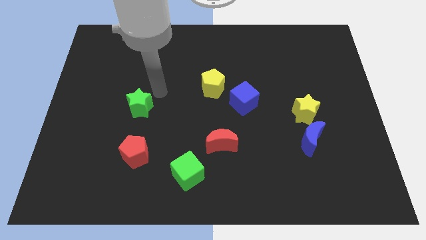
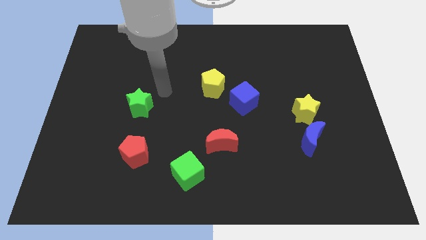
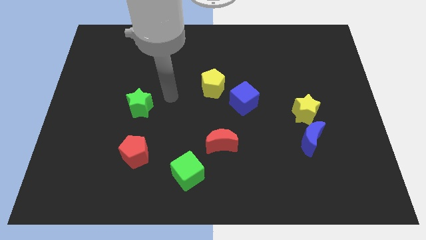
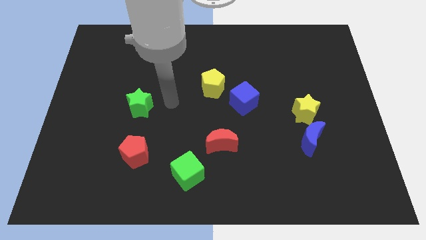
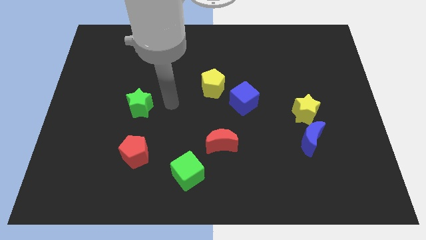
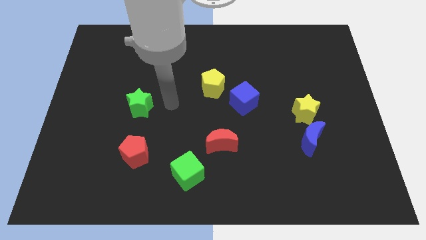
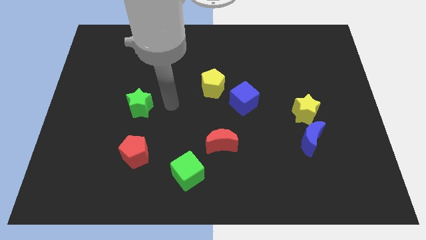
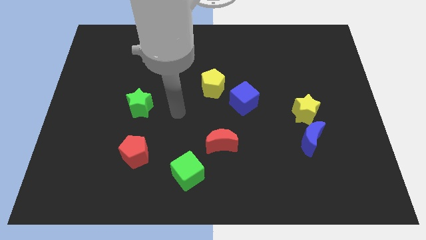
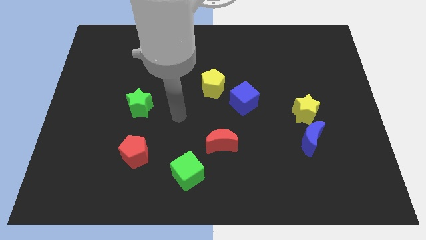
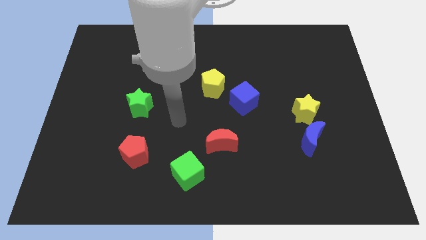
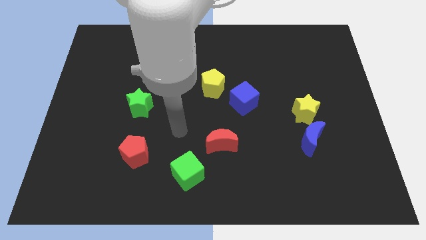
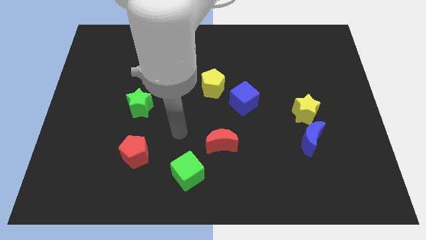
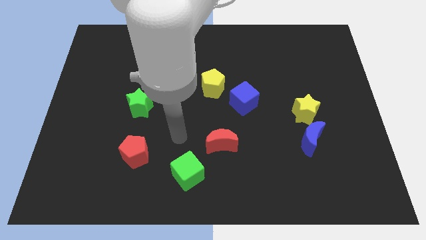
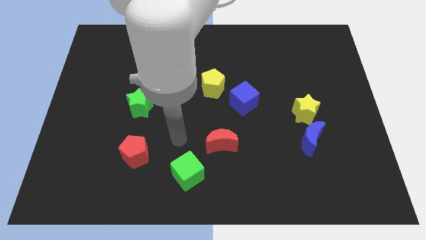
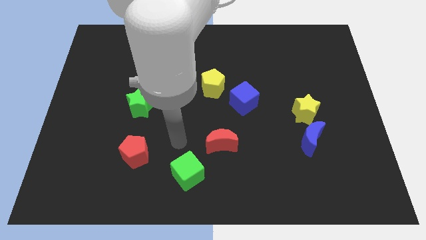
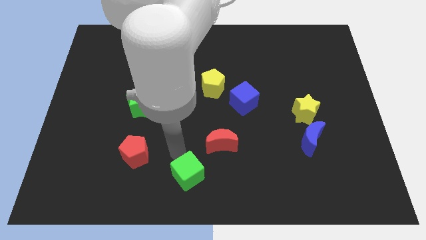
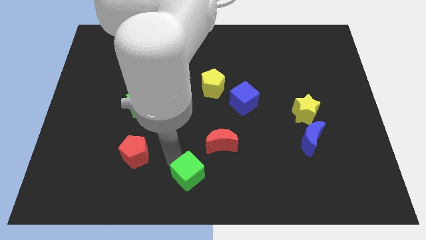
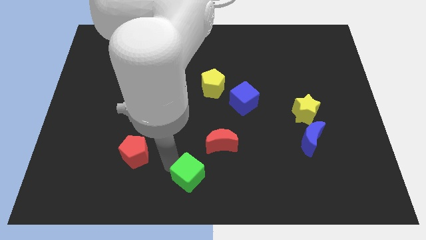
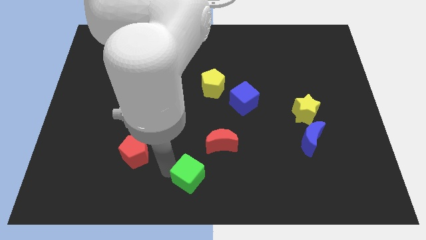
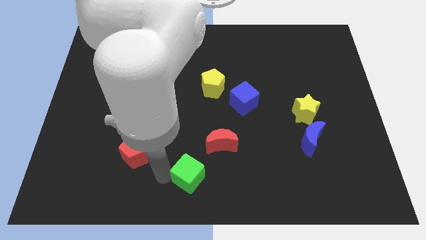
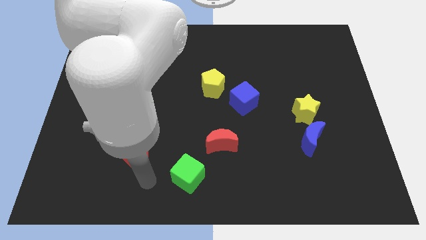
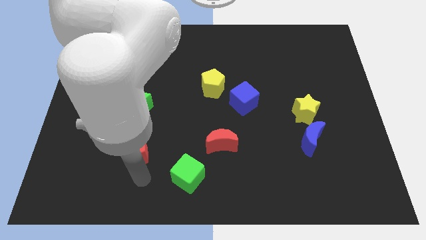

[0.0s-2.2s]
slightly touch the green cube and move away

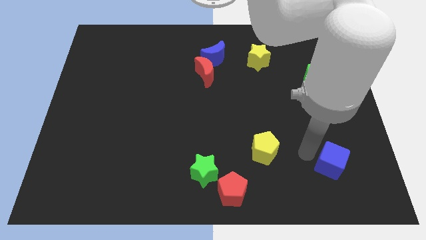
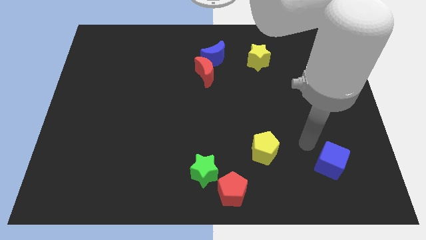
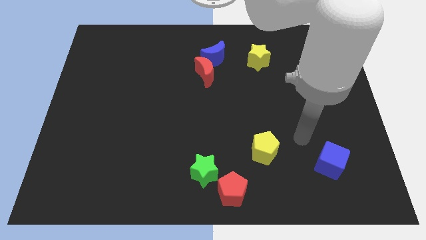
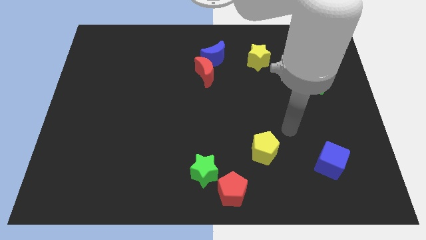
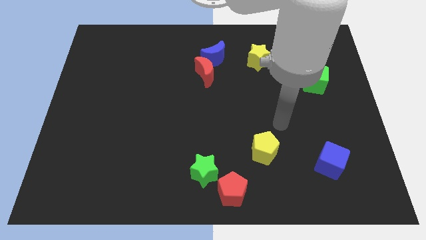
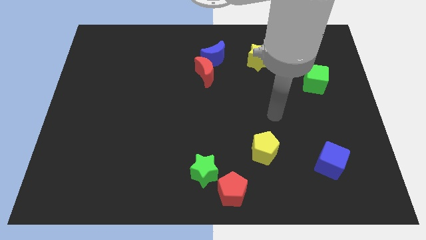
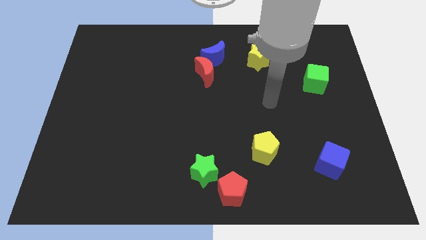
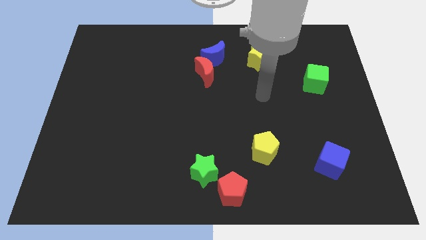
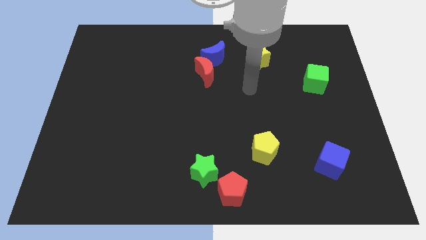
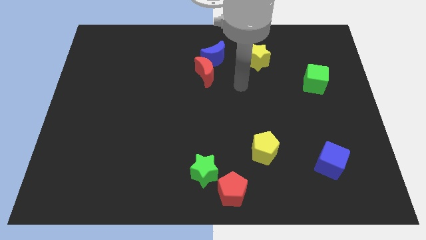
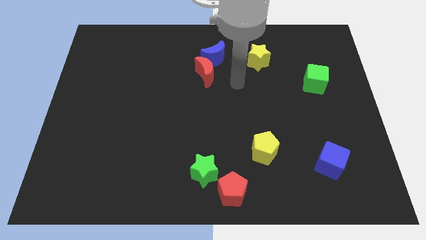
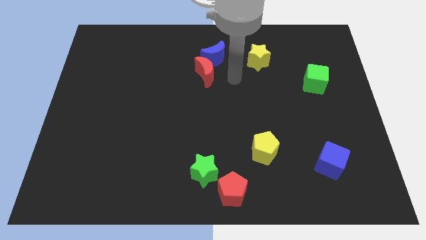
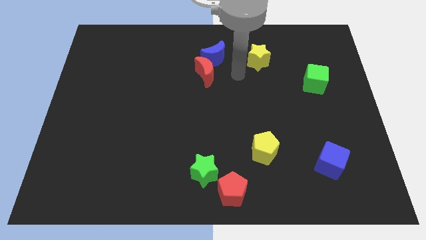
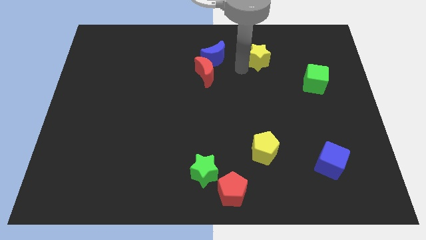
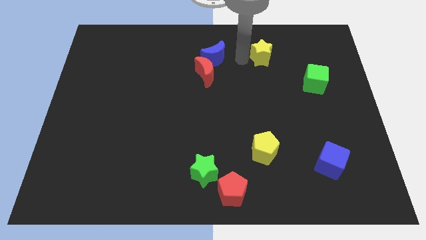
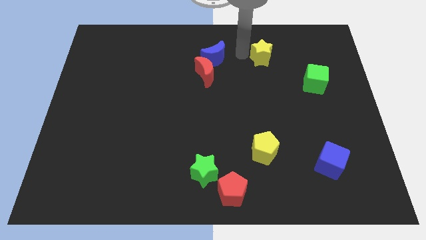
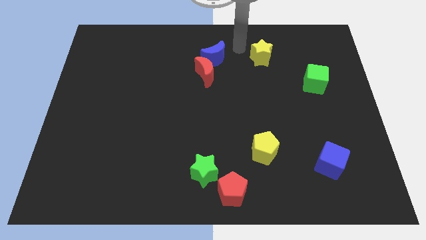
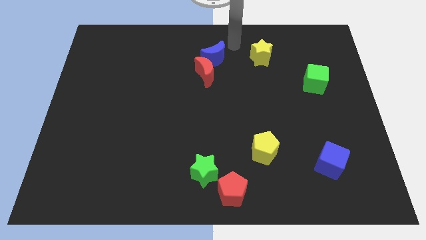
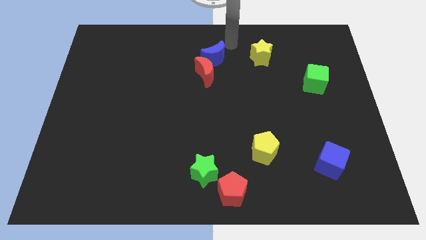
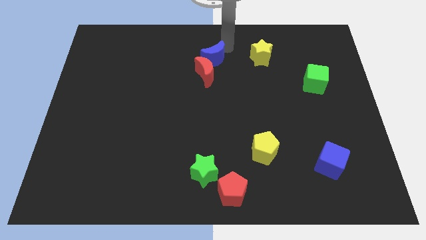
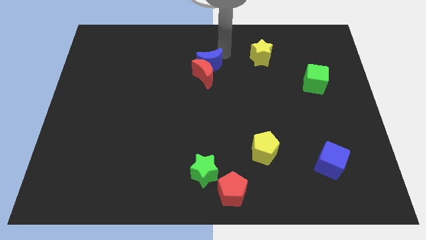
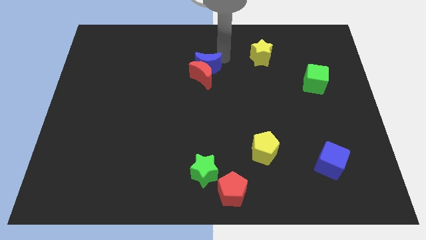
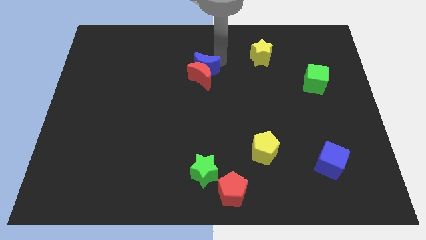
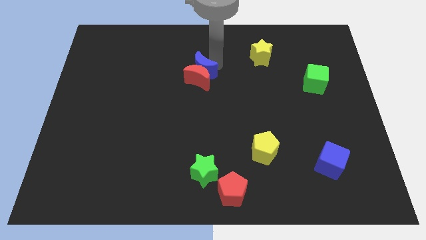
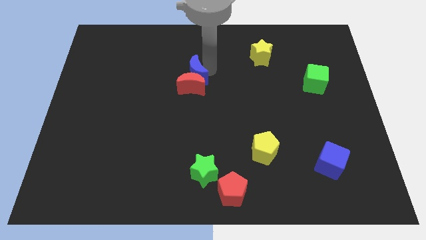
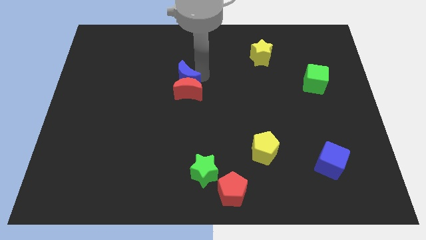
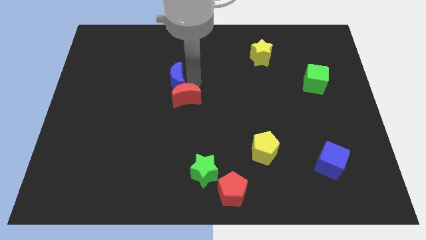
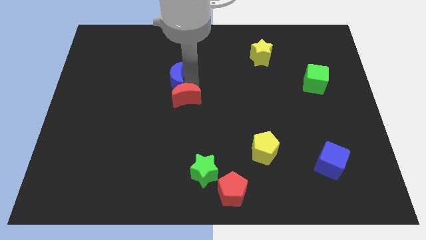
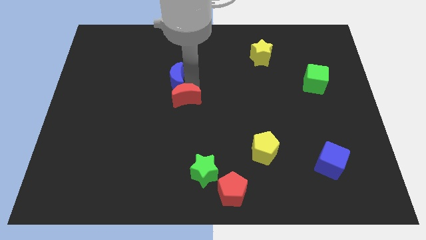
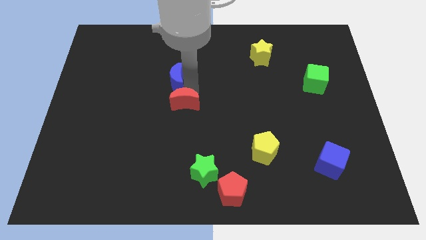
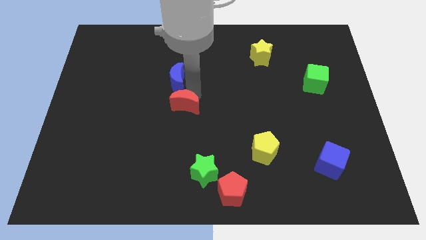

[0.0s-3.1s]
move the blue crescent along with red crescent to the centre of the board

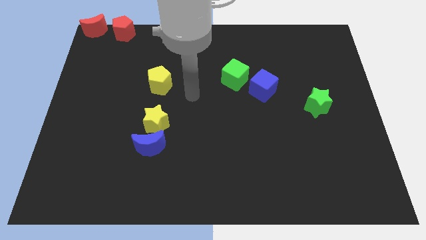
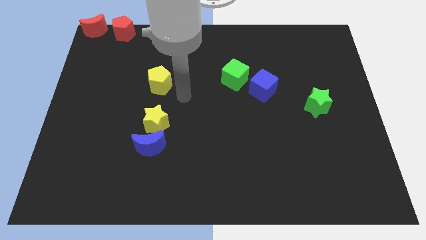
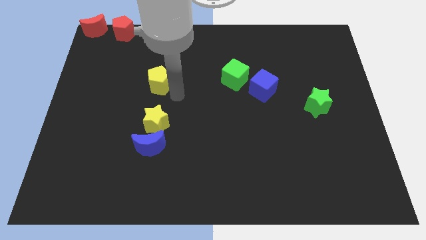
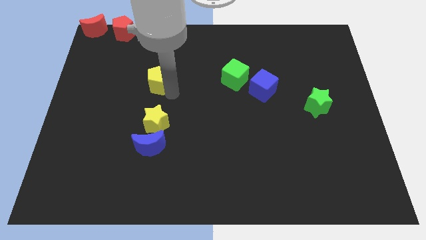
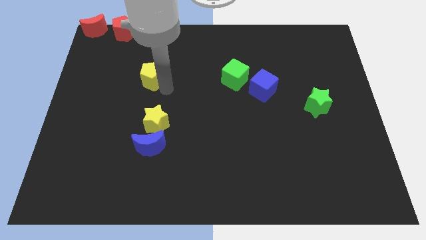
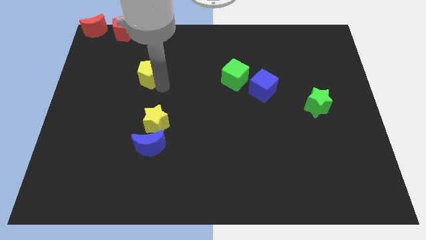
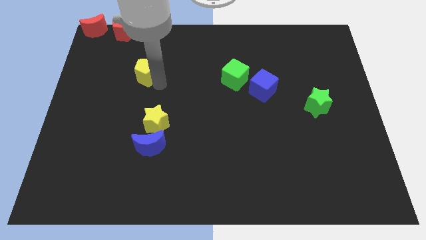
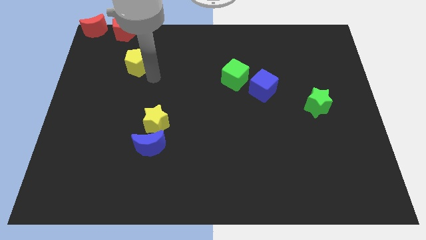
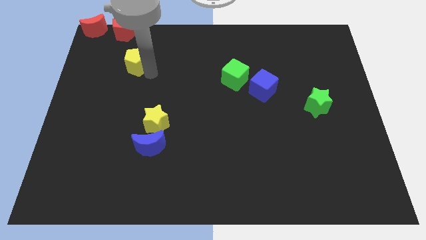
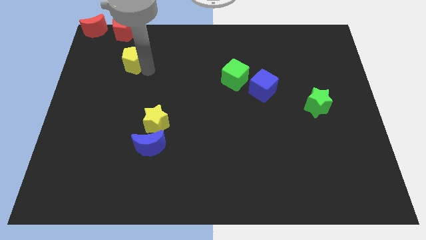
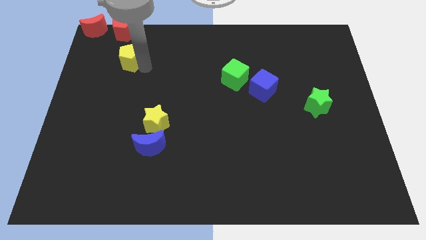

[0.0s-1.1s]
take the yellow pentagon towards the red pentagon

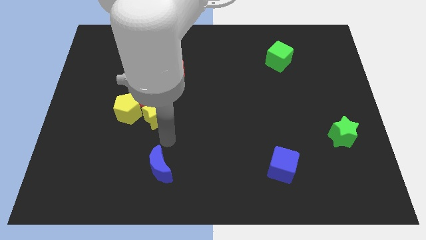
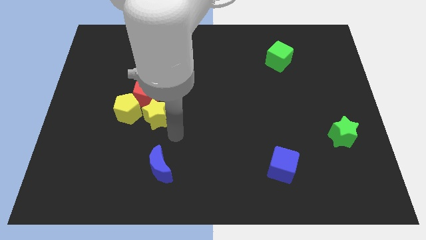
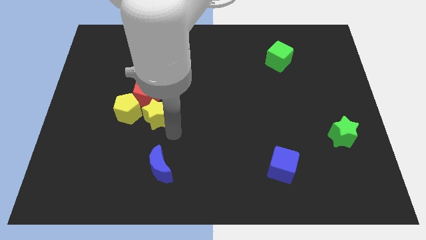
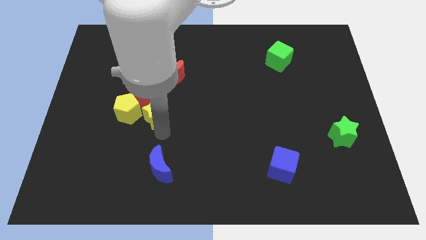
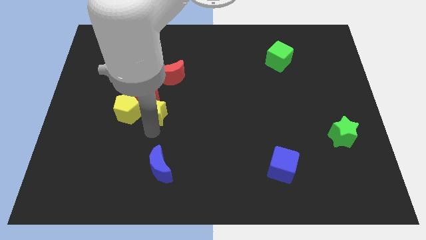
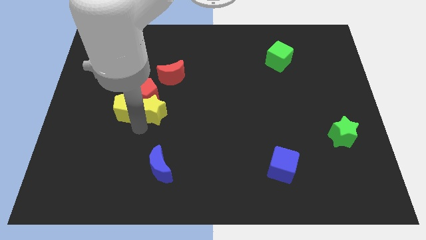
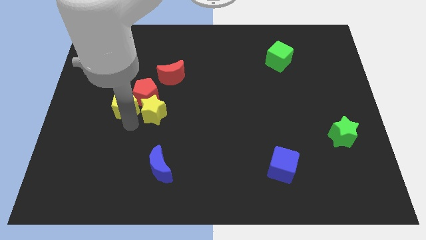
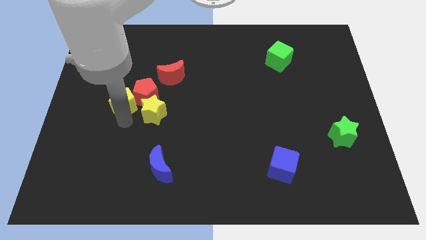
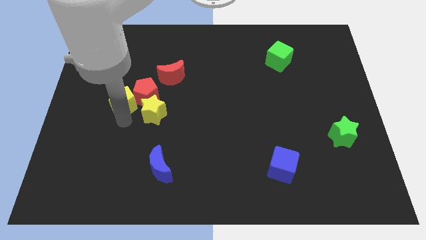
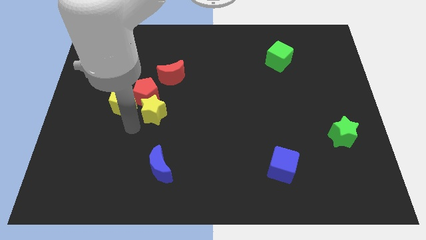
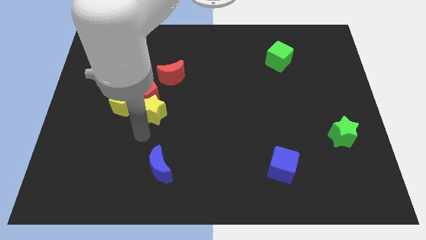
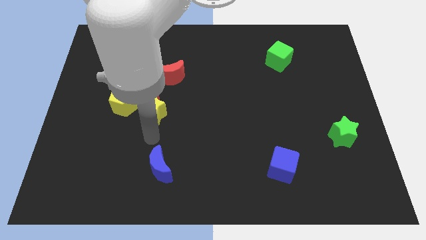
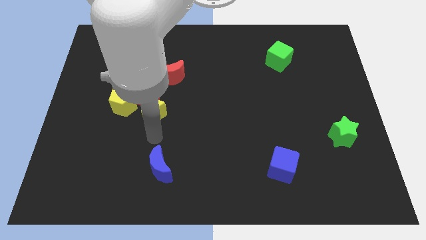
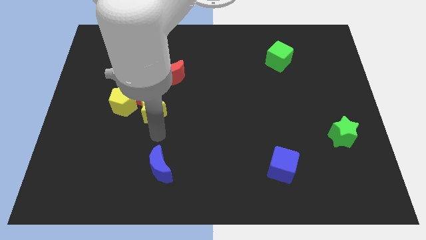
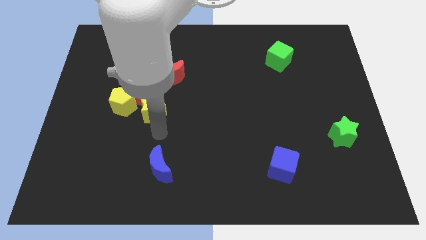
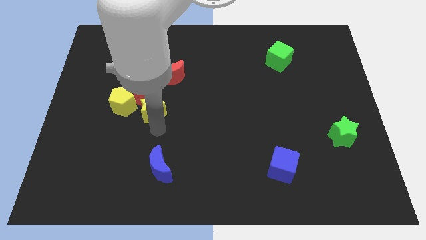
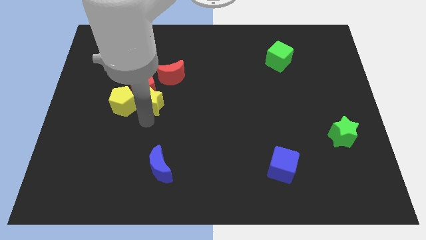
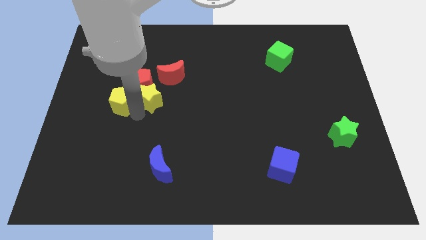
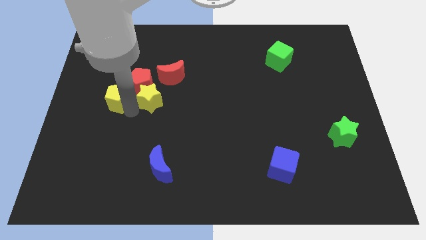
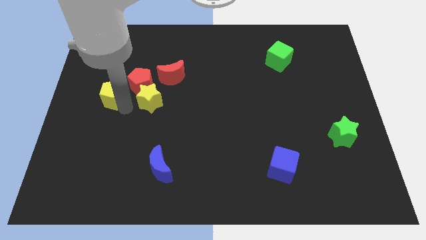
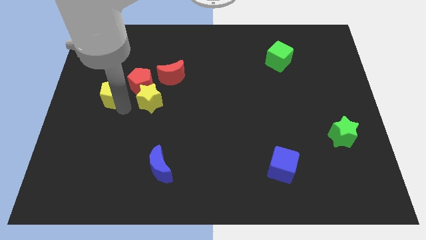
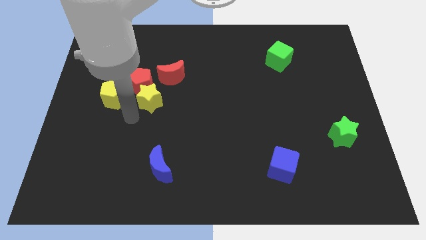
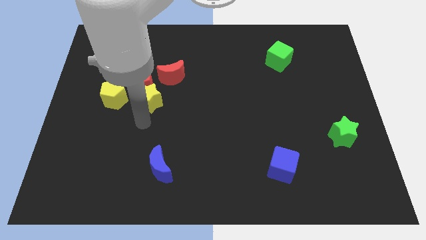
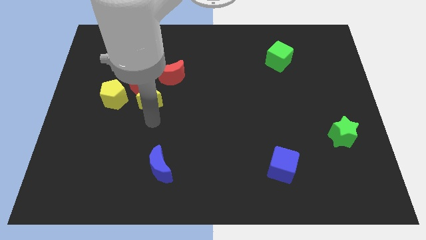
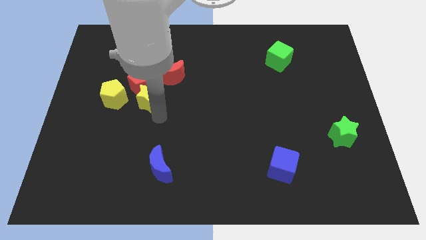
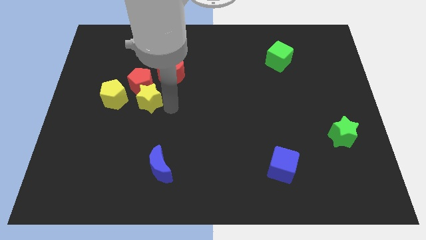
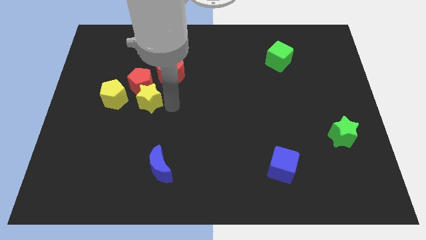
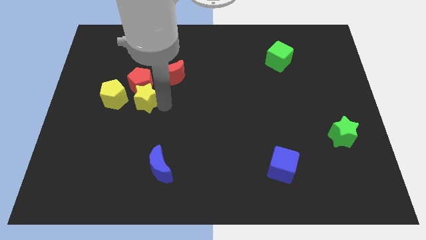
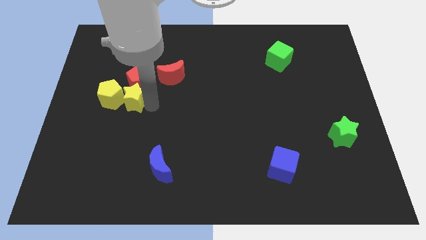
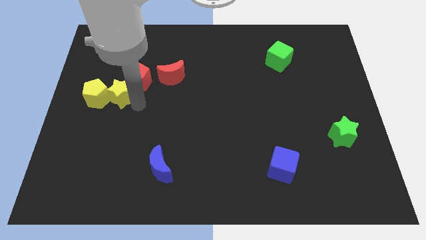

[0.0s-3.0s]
push the group of yellow blocks towards the center left of the board
